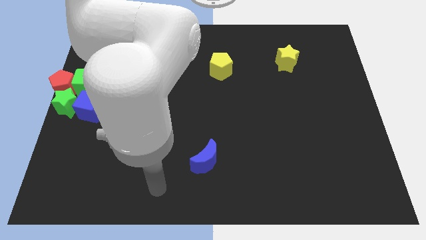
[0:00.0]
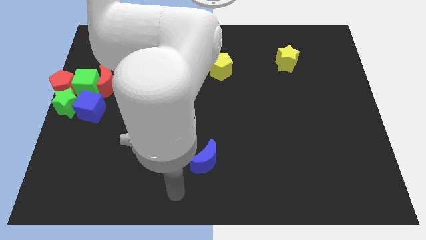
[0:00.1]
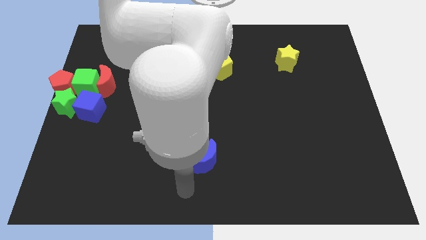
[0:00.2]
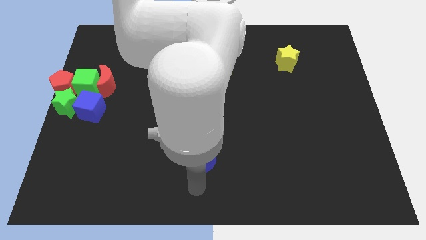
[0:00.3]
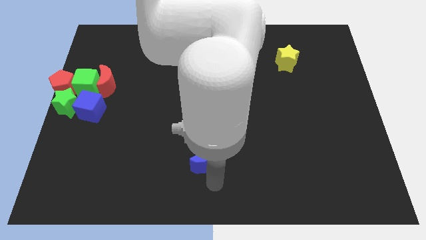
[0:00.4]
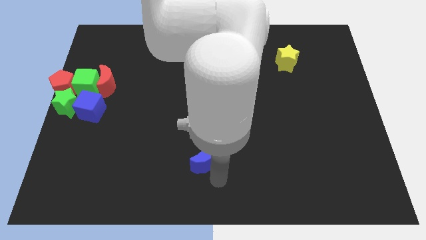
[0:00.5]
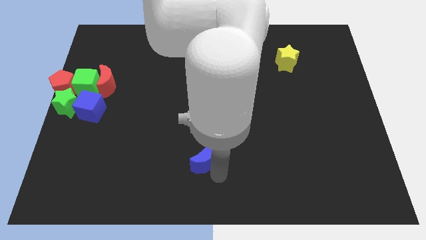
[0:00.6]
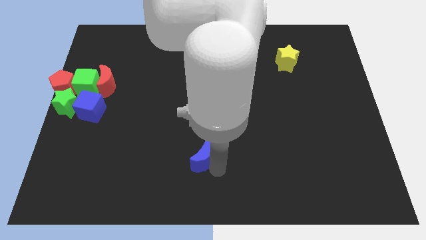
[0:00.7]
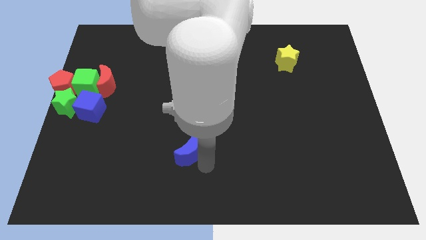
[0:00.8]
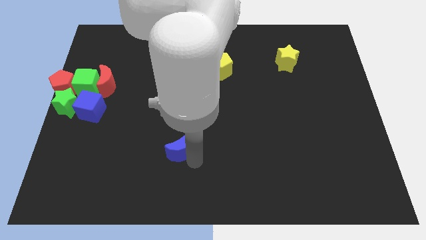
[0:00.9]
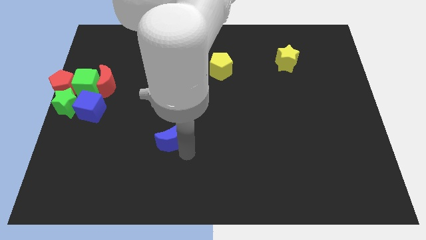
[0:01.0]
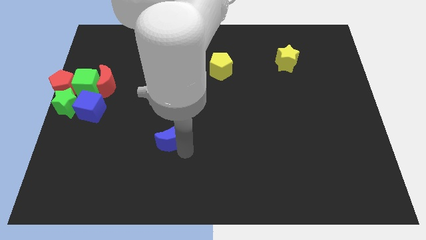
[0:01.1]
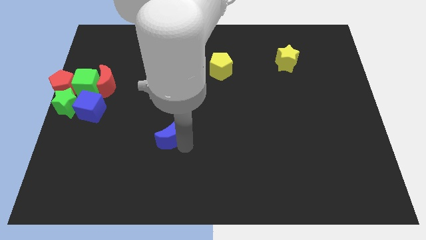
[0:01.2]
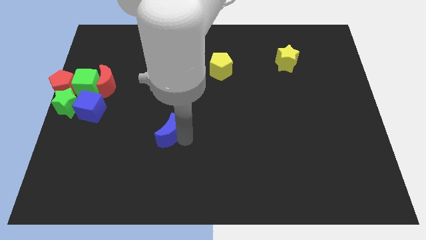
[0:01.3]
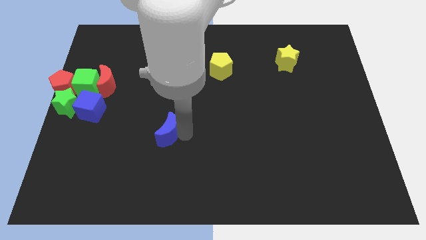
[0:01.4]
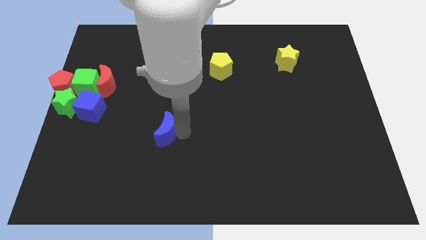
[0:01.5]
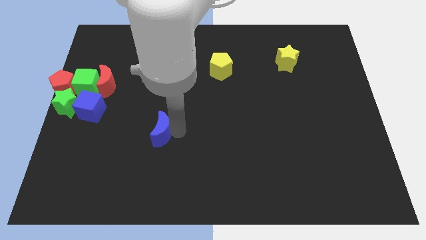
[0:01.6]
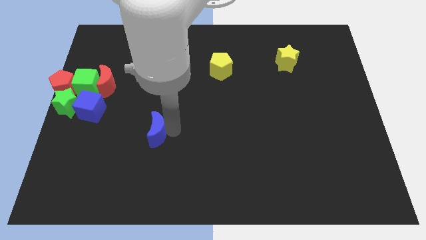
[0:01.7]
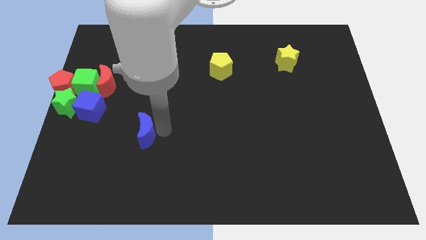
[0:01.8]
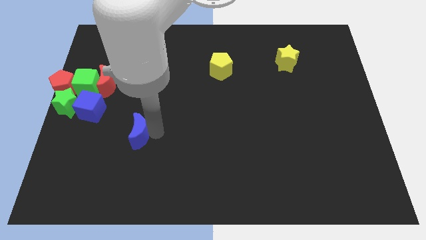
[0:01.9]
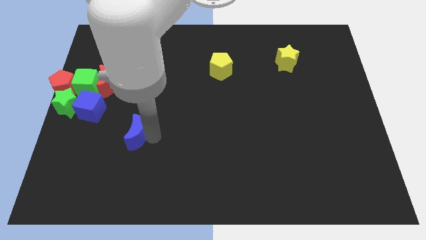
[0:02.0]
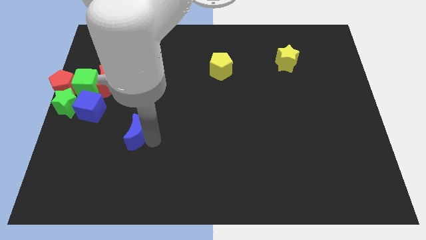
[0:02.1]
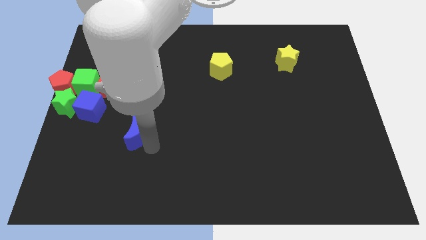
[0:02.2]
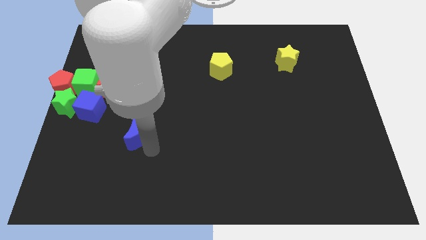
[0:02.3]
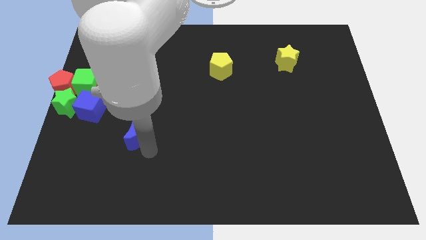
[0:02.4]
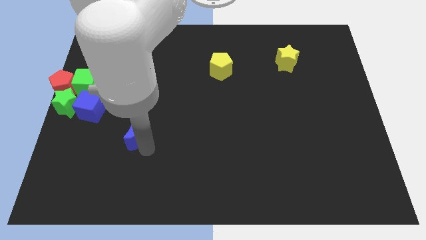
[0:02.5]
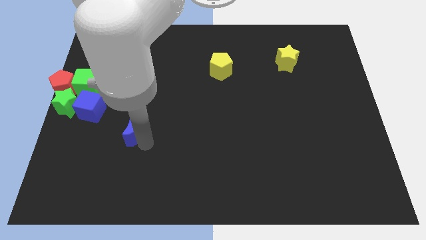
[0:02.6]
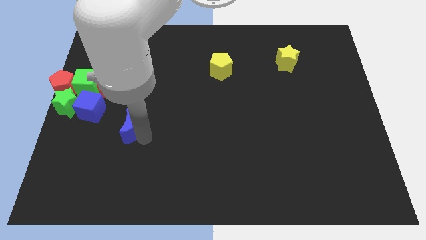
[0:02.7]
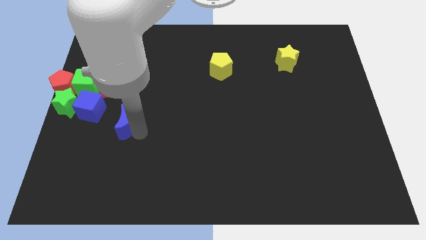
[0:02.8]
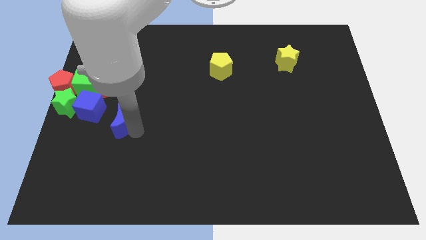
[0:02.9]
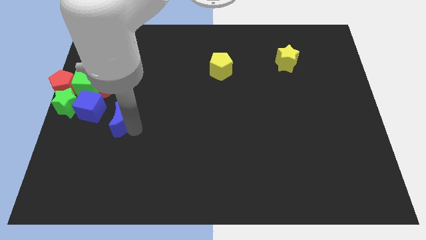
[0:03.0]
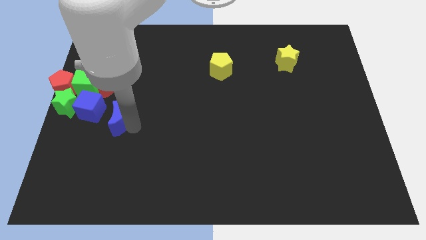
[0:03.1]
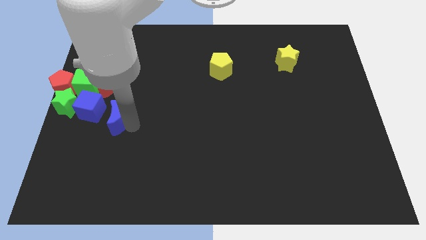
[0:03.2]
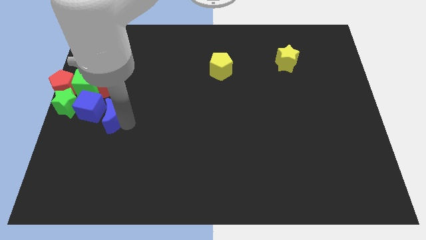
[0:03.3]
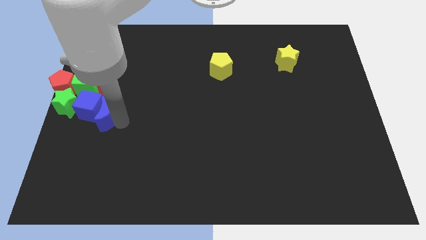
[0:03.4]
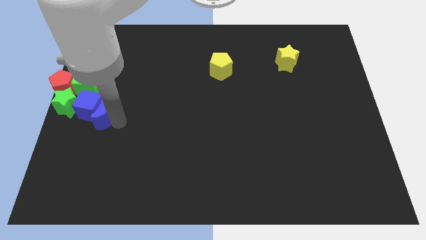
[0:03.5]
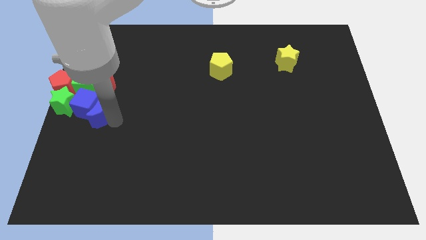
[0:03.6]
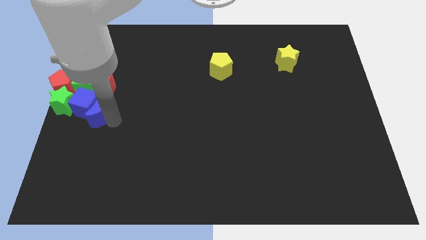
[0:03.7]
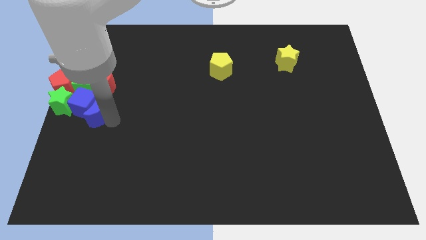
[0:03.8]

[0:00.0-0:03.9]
move blue crescent into the blue cube

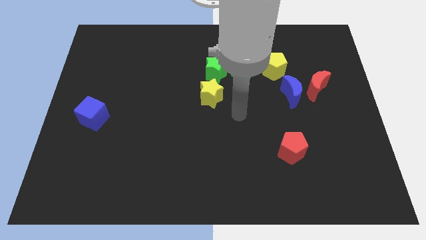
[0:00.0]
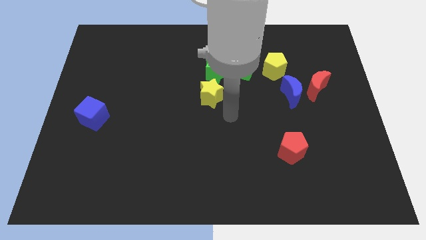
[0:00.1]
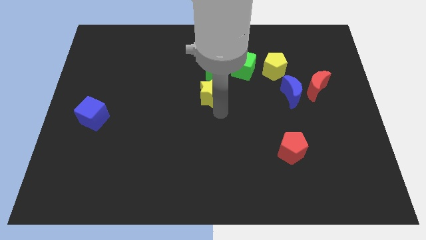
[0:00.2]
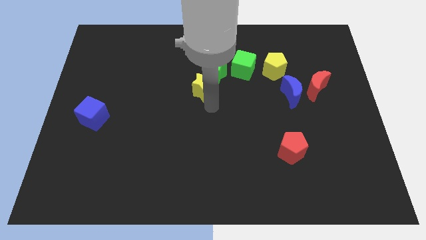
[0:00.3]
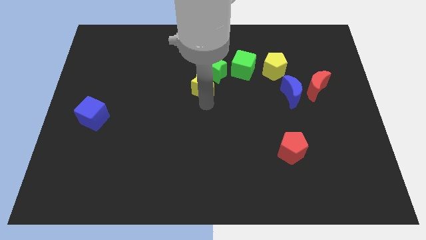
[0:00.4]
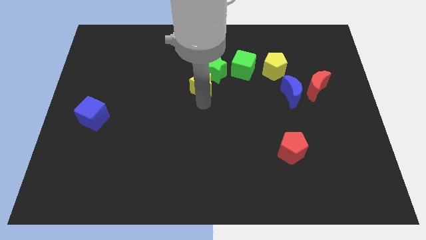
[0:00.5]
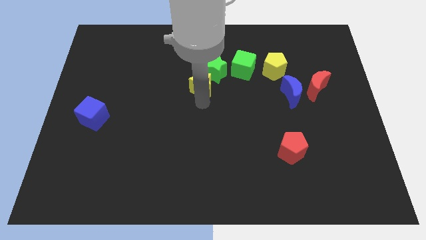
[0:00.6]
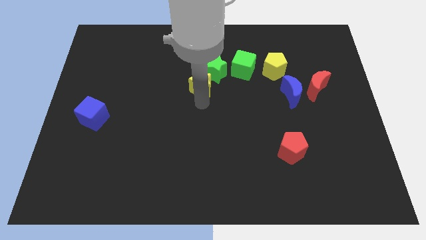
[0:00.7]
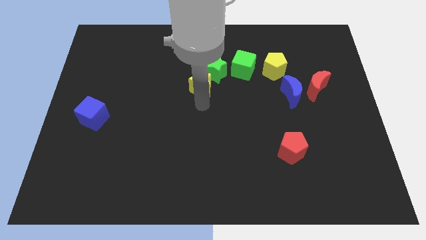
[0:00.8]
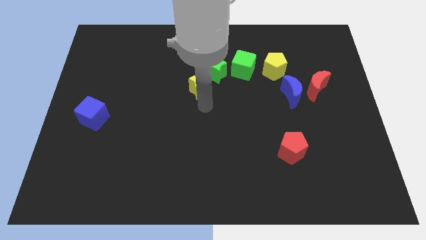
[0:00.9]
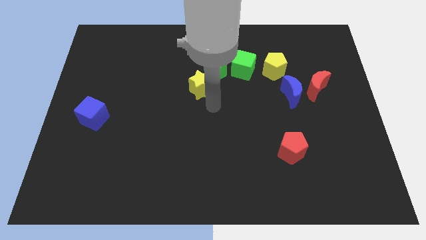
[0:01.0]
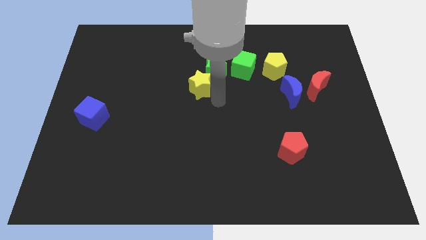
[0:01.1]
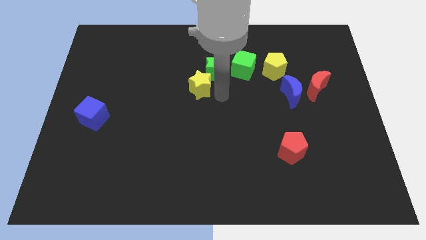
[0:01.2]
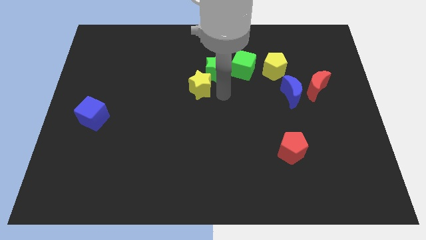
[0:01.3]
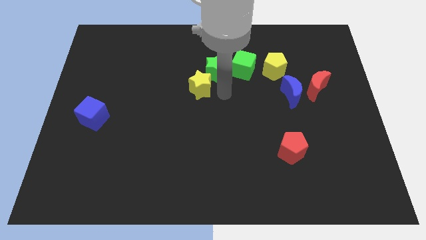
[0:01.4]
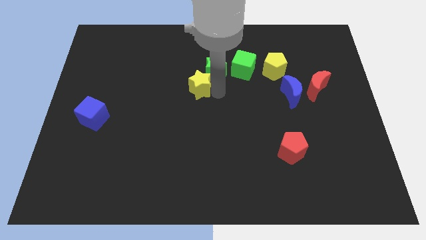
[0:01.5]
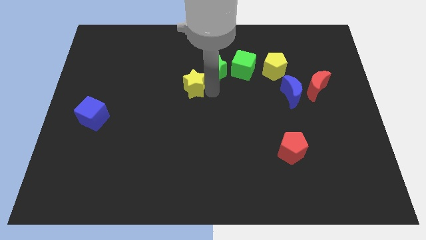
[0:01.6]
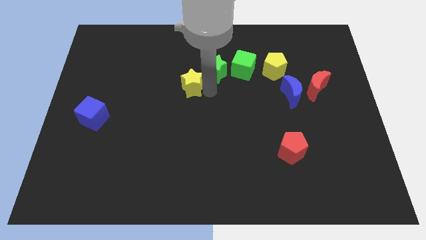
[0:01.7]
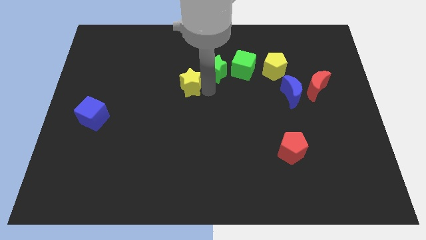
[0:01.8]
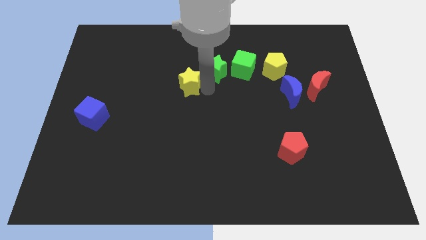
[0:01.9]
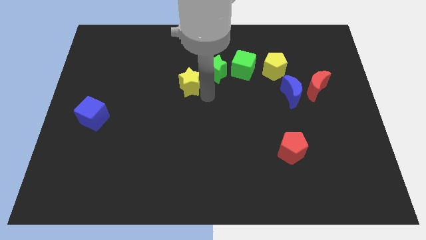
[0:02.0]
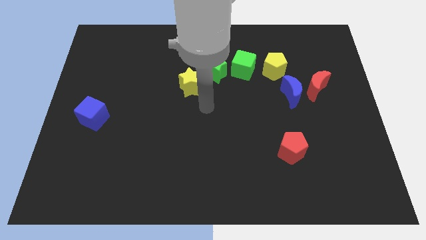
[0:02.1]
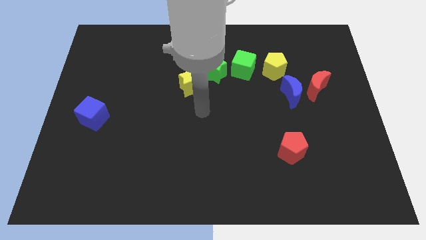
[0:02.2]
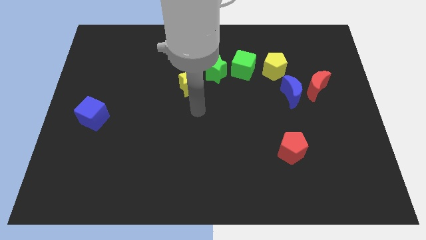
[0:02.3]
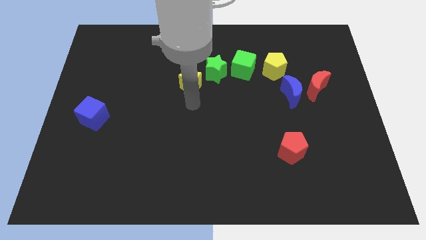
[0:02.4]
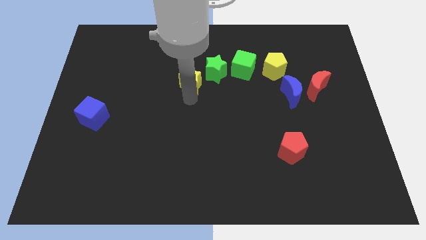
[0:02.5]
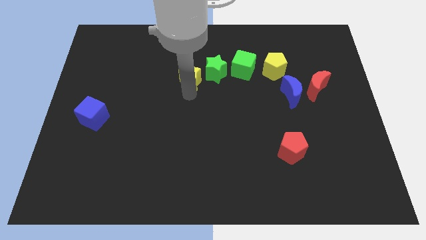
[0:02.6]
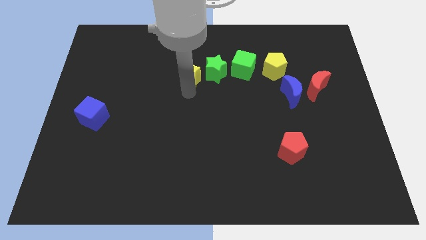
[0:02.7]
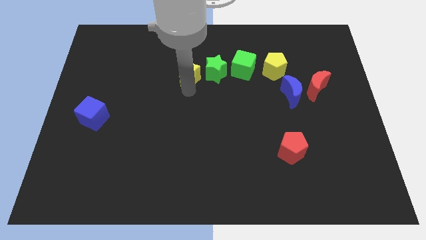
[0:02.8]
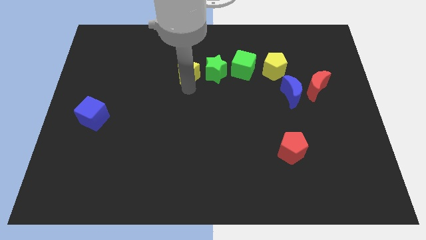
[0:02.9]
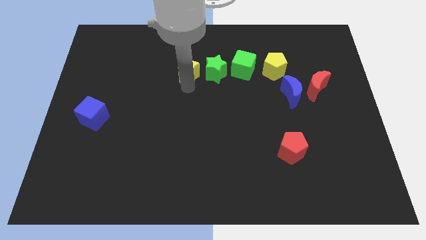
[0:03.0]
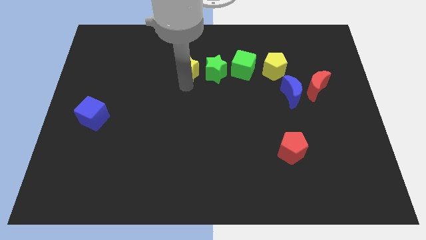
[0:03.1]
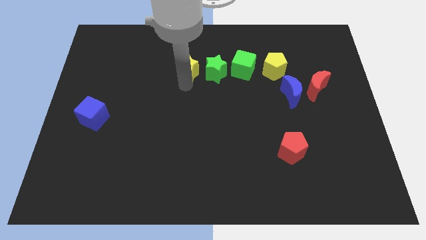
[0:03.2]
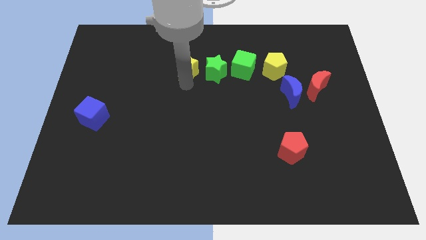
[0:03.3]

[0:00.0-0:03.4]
put the yellow star to the left of the green star

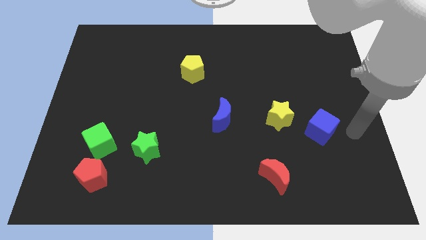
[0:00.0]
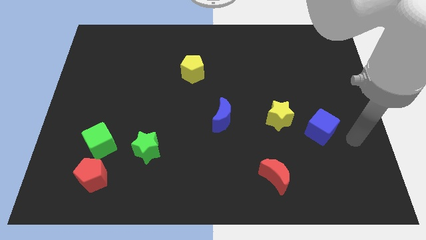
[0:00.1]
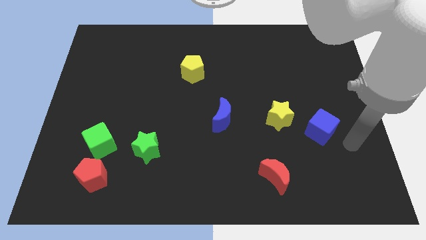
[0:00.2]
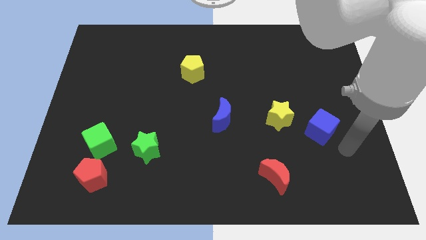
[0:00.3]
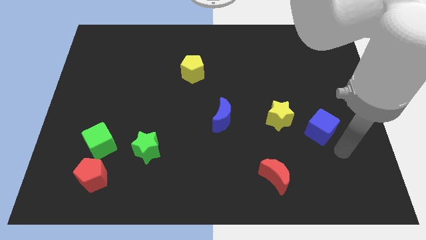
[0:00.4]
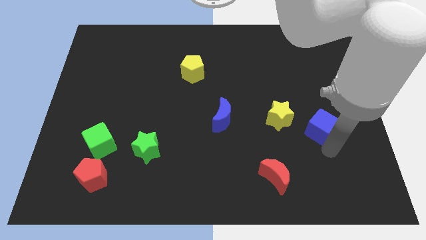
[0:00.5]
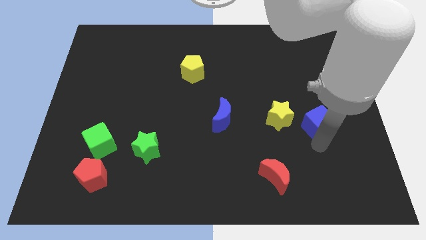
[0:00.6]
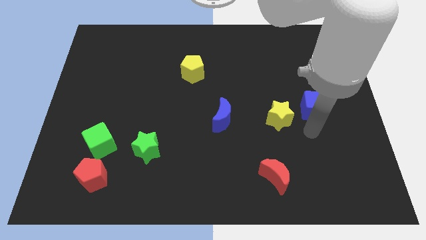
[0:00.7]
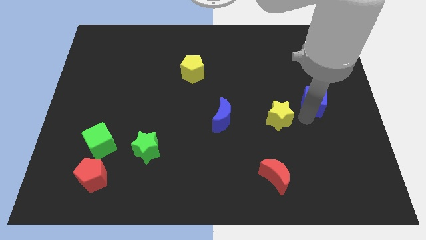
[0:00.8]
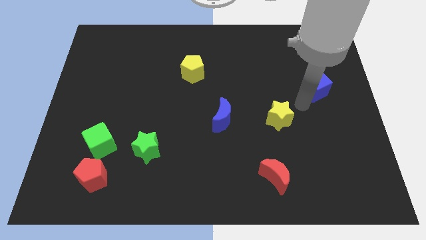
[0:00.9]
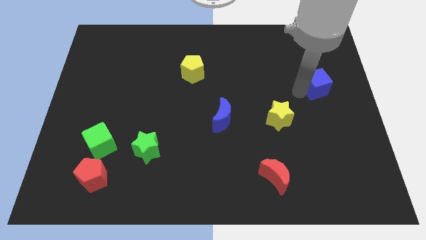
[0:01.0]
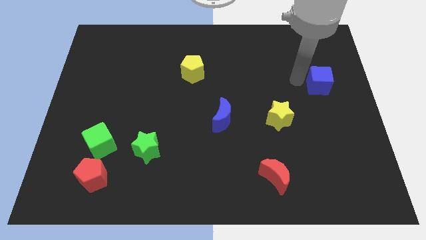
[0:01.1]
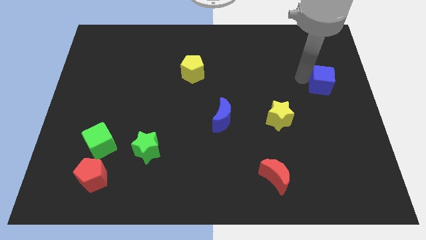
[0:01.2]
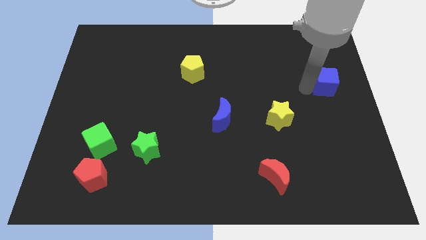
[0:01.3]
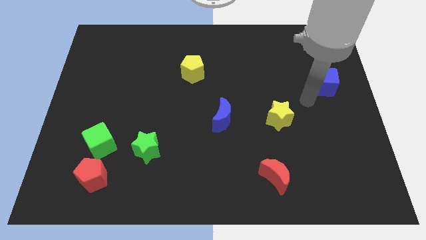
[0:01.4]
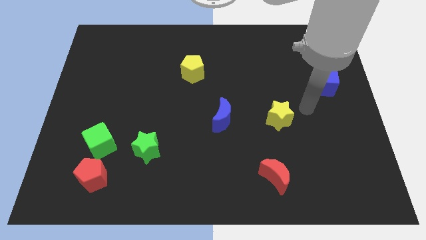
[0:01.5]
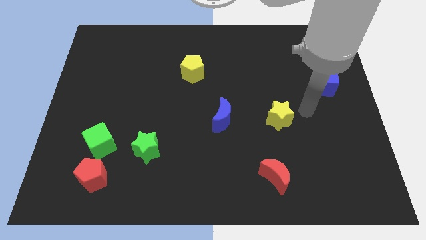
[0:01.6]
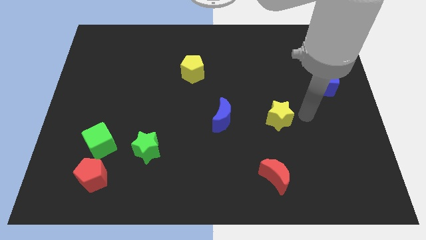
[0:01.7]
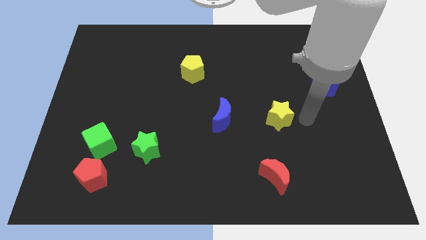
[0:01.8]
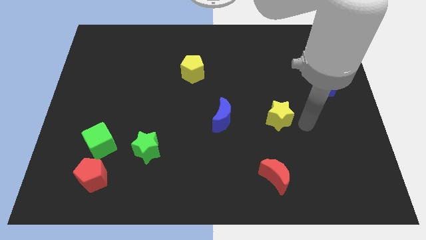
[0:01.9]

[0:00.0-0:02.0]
move the blue cube towards the top side
